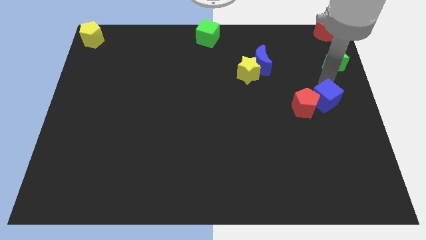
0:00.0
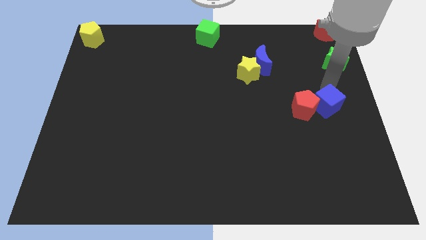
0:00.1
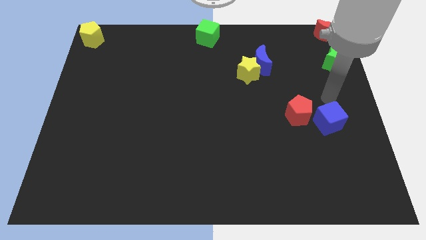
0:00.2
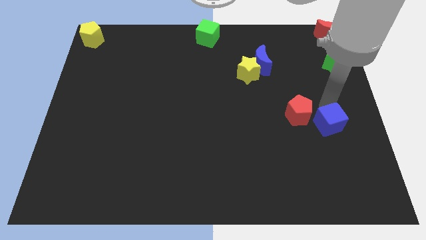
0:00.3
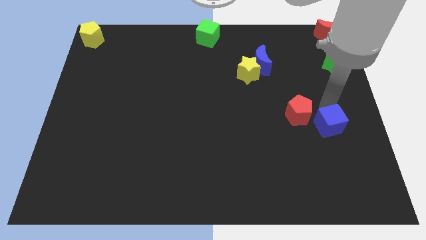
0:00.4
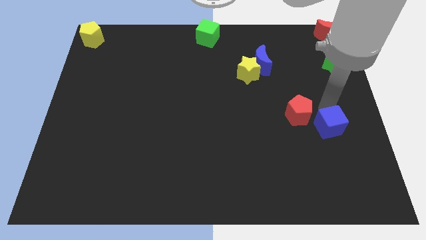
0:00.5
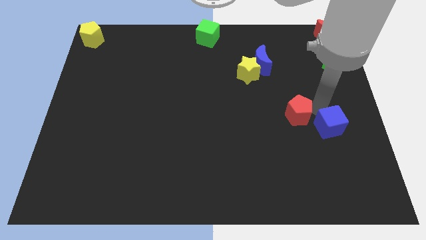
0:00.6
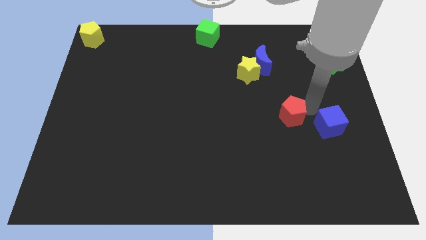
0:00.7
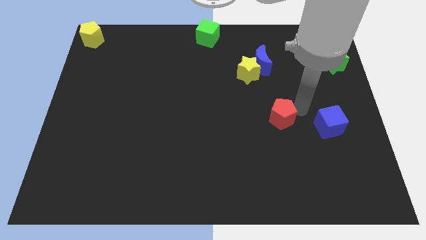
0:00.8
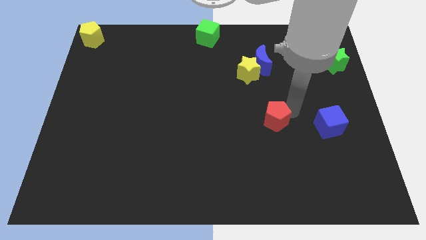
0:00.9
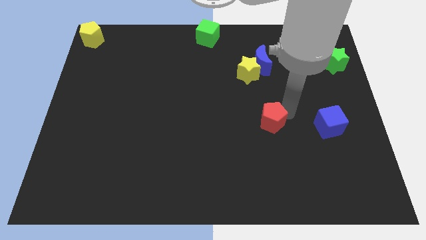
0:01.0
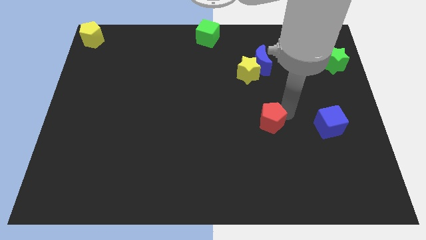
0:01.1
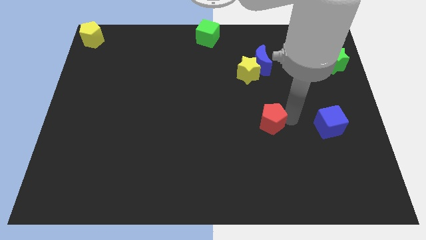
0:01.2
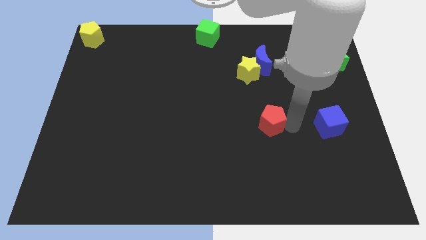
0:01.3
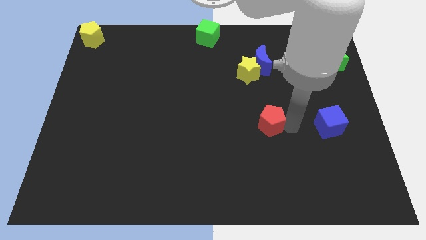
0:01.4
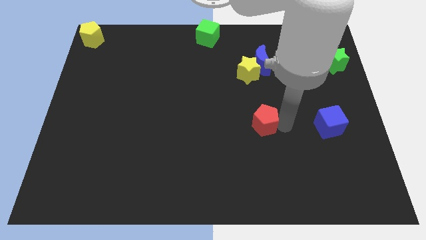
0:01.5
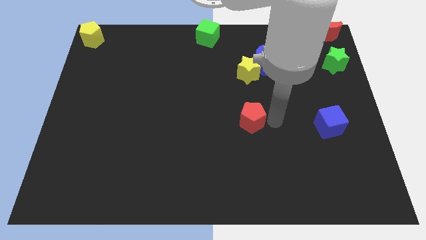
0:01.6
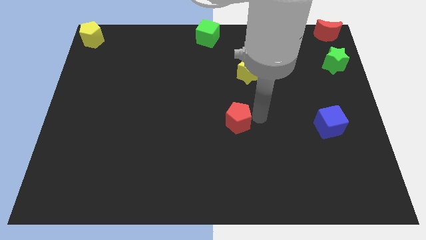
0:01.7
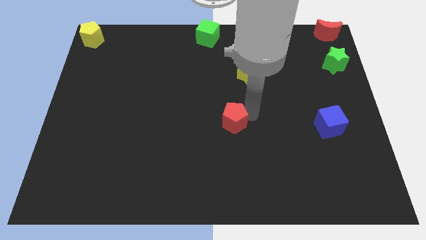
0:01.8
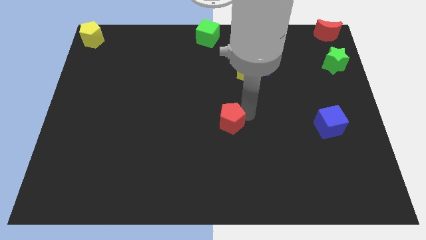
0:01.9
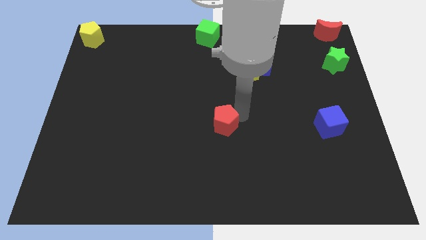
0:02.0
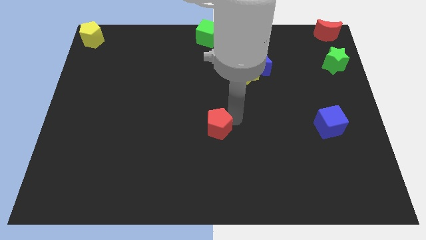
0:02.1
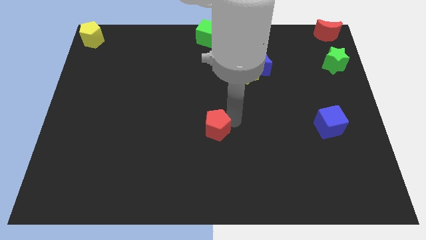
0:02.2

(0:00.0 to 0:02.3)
separate red pentagon from the blue cube

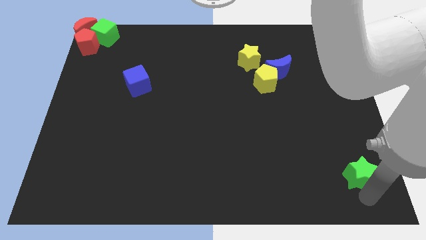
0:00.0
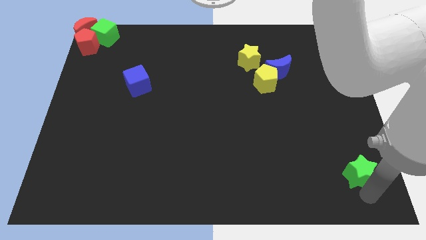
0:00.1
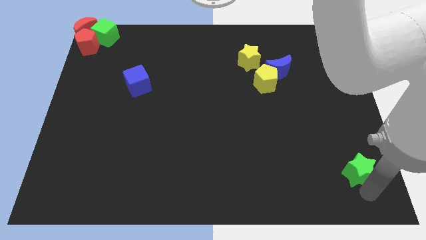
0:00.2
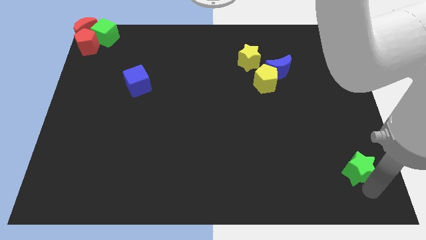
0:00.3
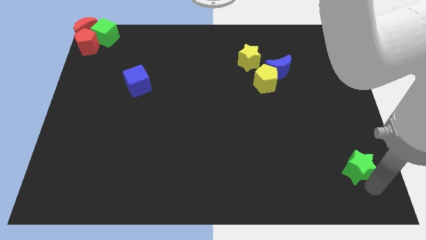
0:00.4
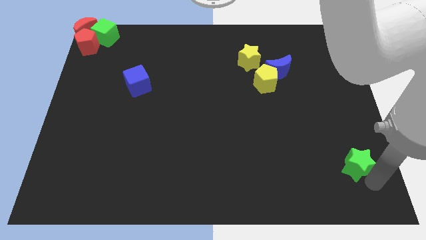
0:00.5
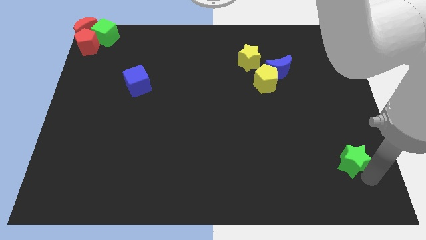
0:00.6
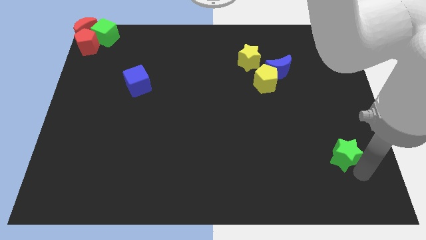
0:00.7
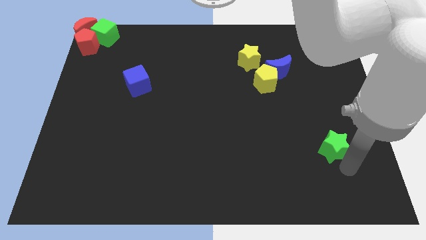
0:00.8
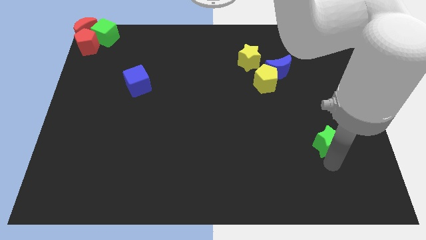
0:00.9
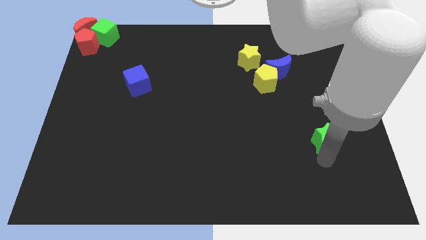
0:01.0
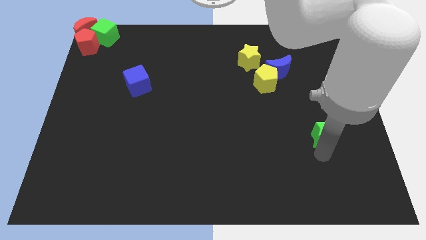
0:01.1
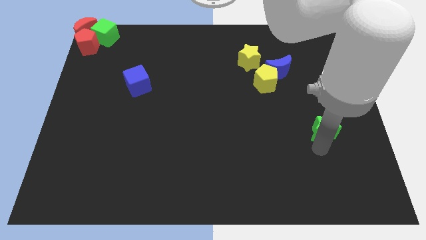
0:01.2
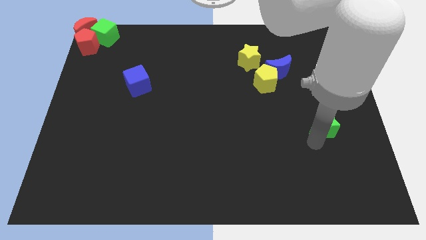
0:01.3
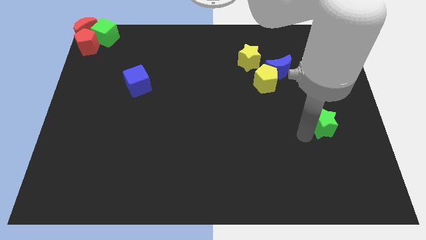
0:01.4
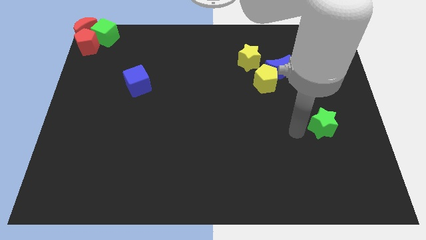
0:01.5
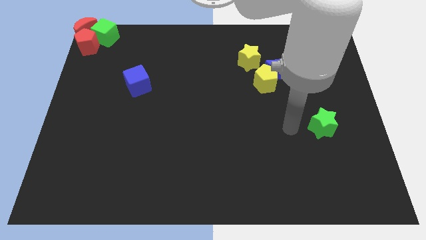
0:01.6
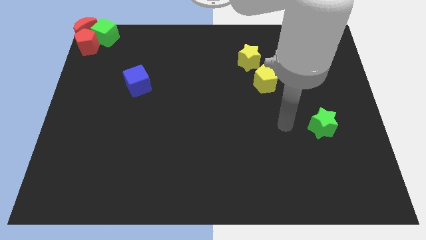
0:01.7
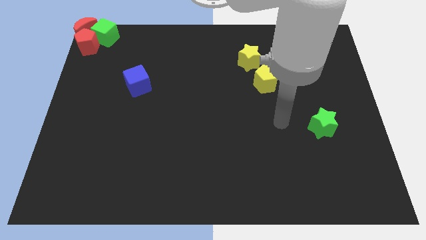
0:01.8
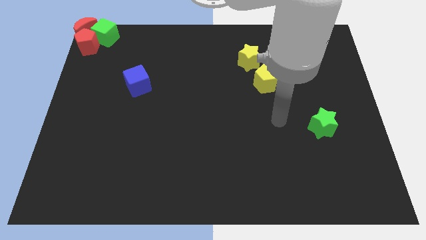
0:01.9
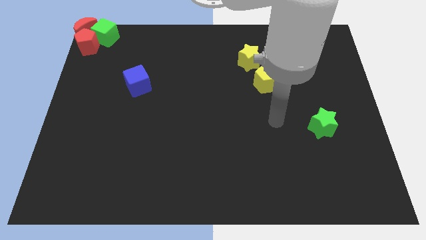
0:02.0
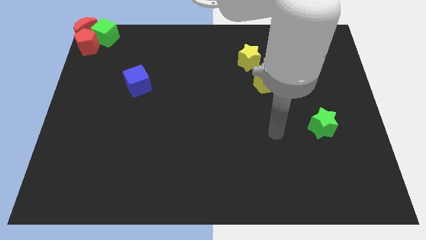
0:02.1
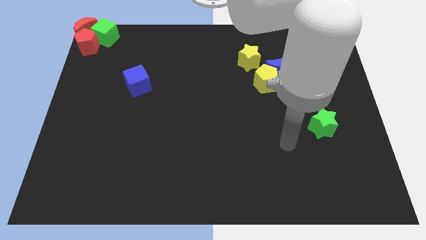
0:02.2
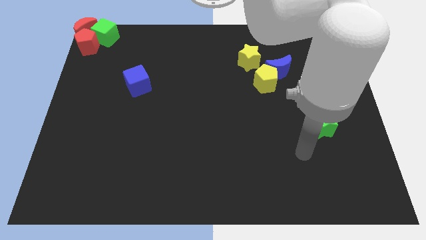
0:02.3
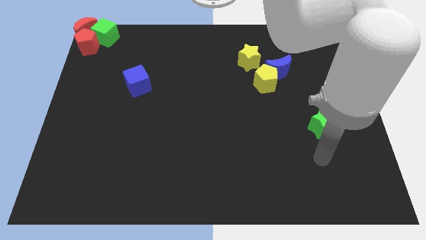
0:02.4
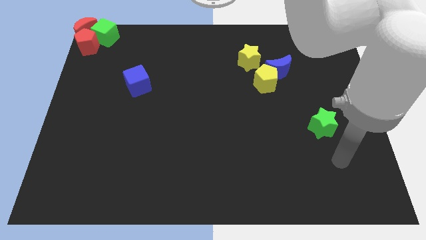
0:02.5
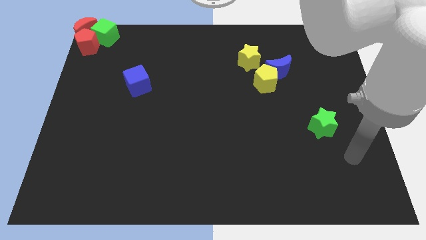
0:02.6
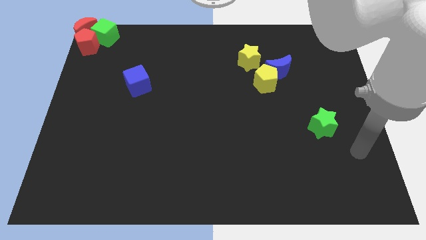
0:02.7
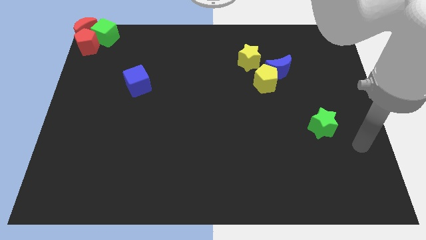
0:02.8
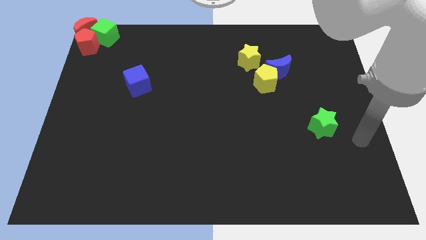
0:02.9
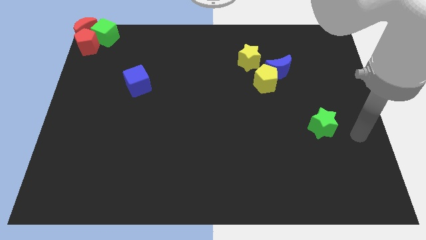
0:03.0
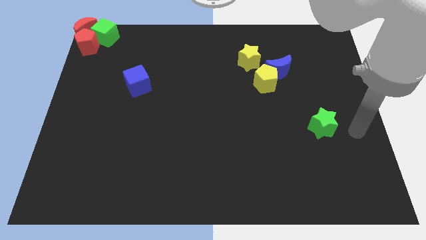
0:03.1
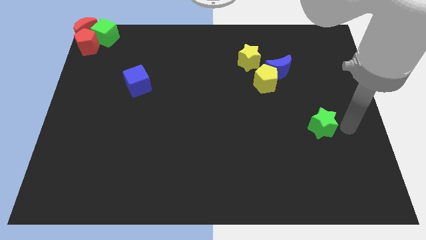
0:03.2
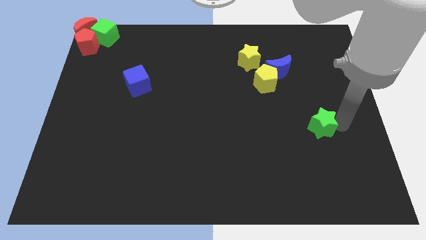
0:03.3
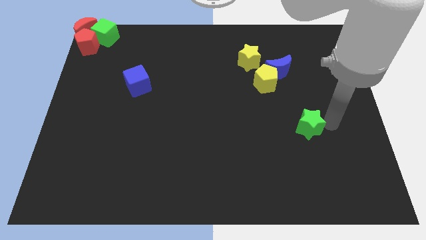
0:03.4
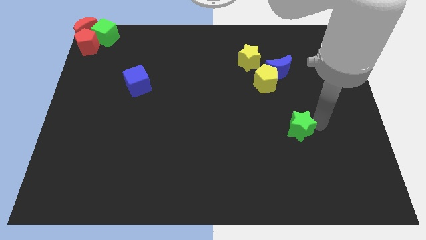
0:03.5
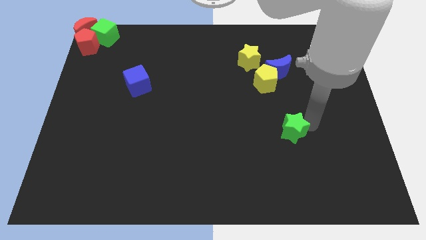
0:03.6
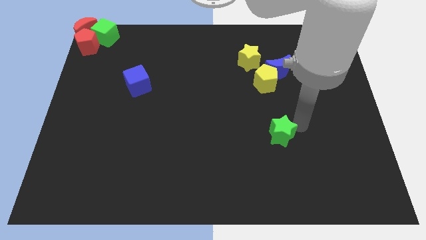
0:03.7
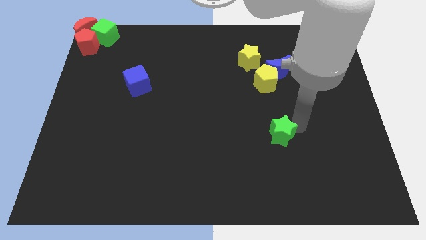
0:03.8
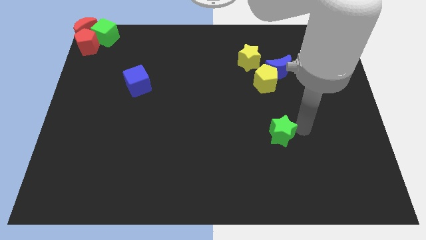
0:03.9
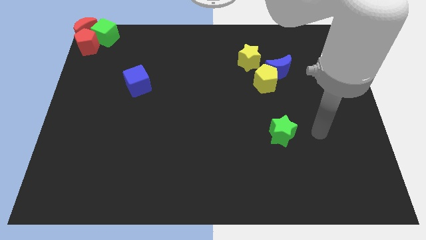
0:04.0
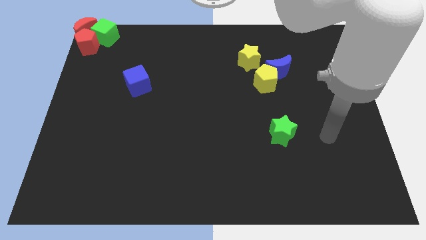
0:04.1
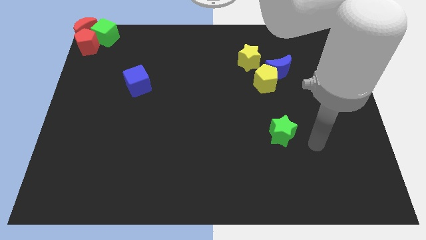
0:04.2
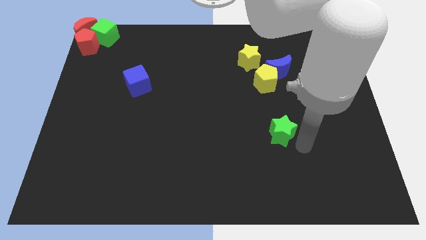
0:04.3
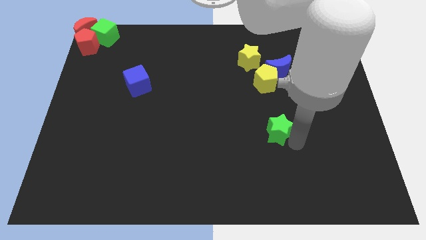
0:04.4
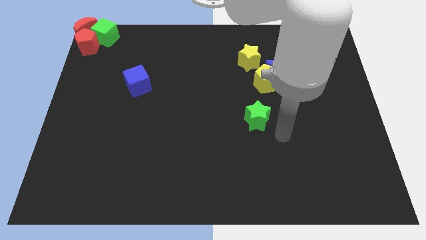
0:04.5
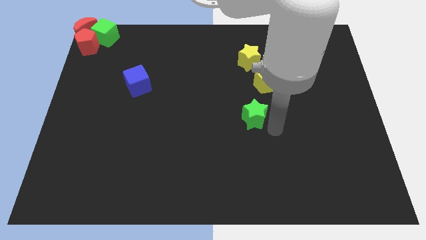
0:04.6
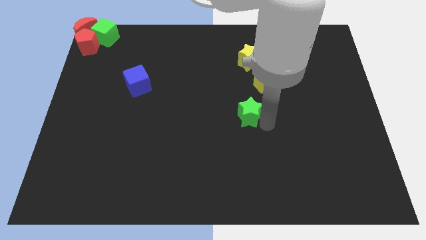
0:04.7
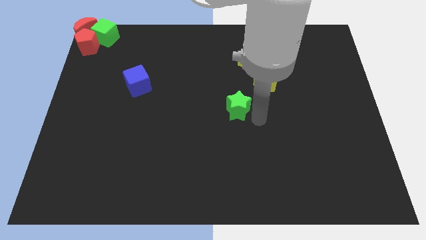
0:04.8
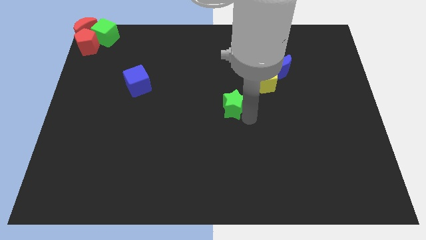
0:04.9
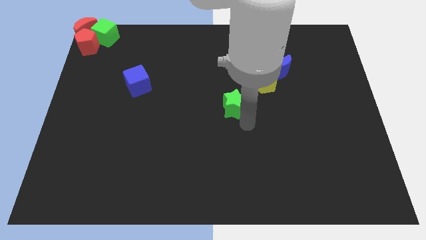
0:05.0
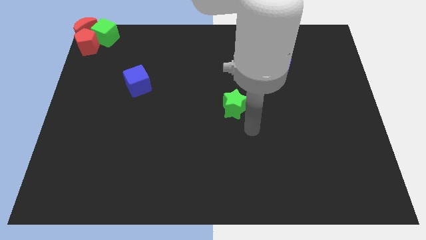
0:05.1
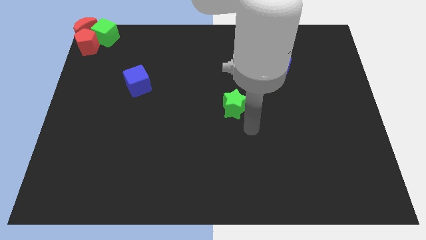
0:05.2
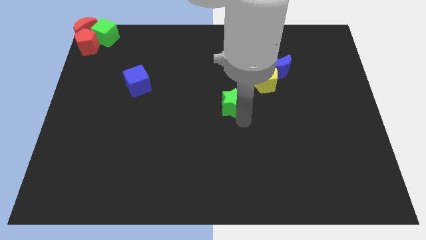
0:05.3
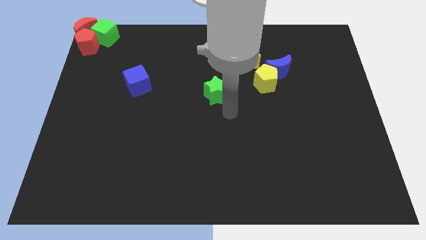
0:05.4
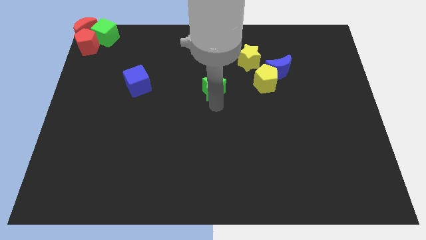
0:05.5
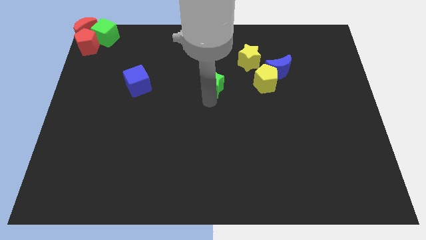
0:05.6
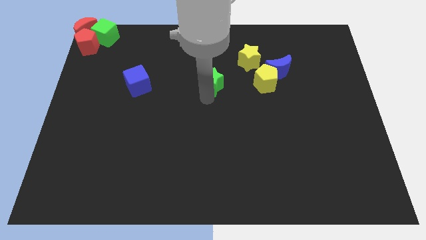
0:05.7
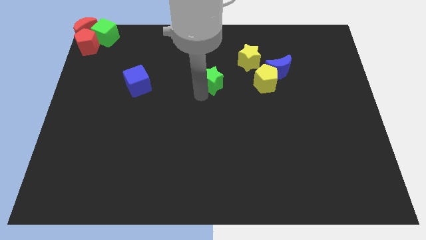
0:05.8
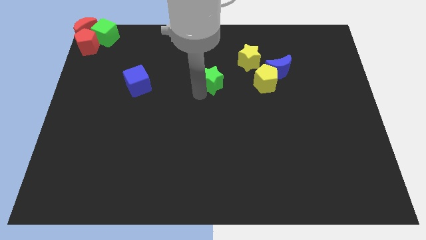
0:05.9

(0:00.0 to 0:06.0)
place the green star in between the yellow pentagon and blue cube

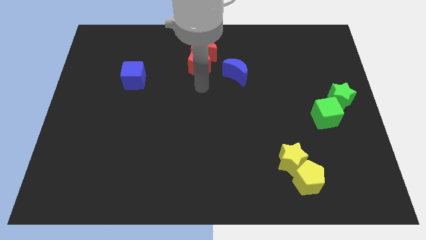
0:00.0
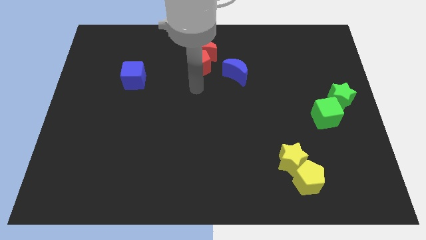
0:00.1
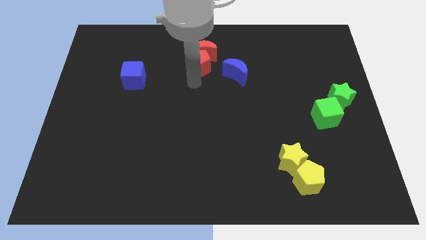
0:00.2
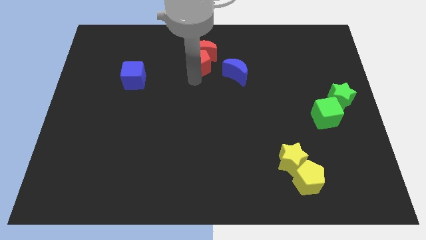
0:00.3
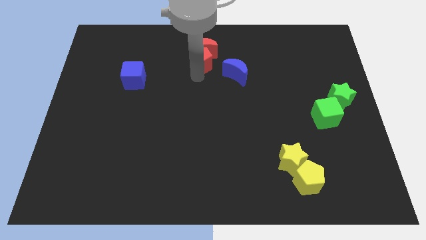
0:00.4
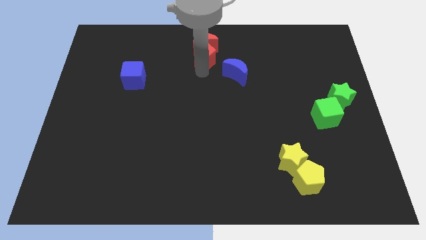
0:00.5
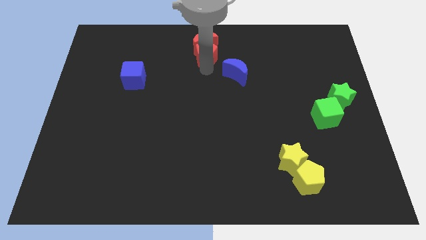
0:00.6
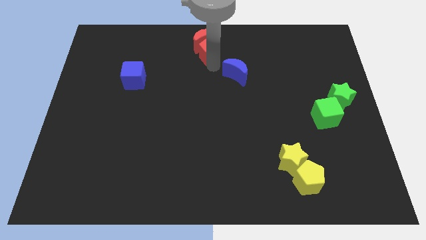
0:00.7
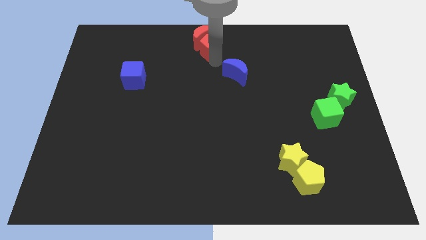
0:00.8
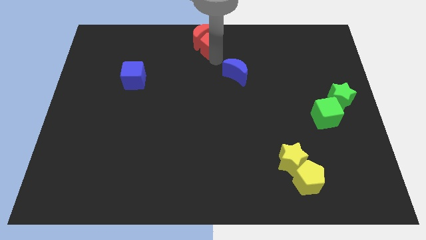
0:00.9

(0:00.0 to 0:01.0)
push the red pentagon along with the red crescent slightly to the top
